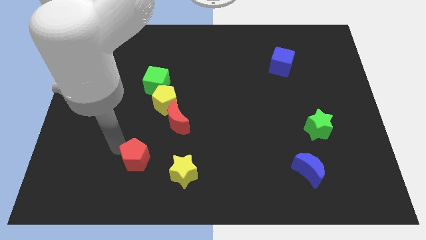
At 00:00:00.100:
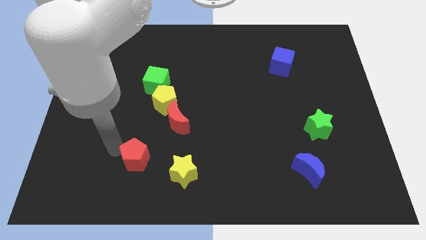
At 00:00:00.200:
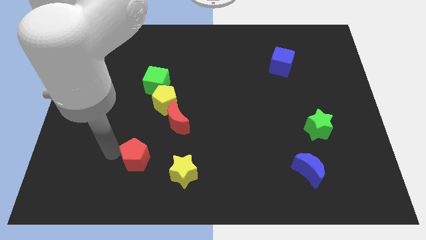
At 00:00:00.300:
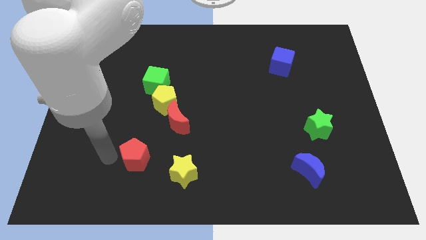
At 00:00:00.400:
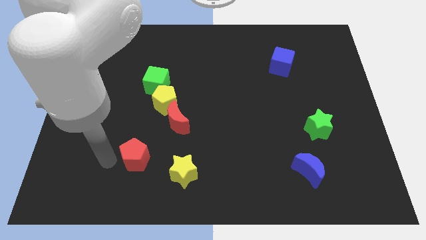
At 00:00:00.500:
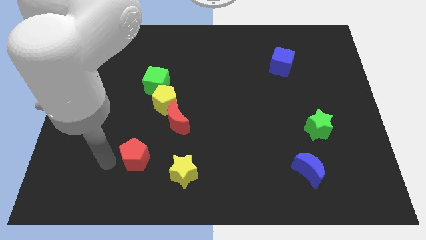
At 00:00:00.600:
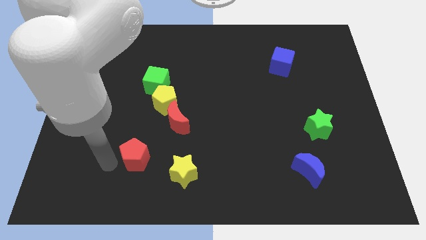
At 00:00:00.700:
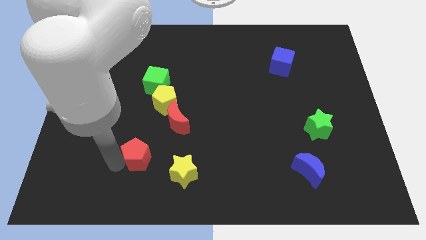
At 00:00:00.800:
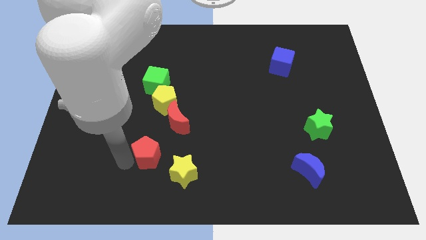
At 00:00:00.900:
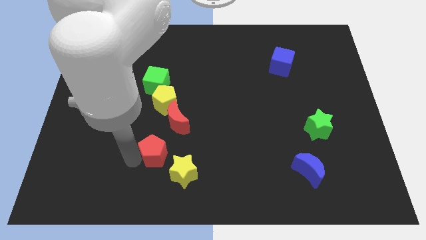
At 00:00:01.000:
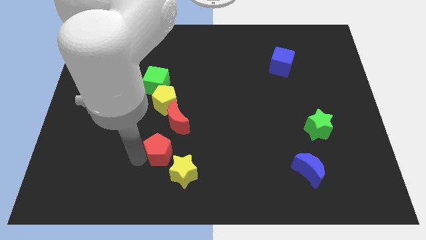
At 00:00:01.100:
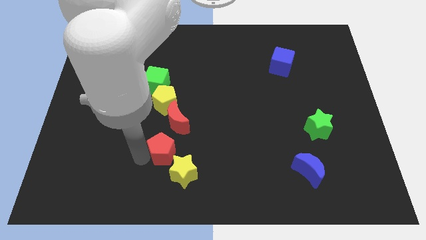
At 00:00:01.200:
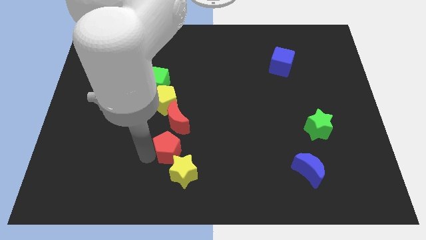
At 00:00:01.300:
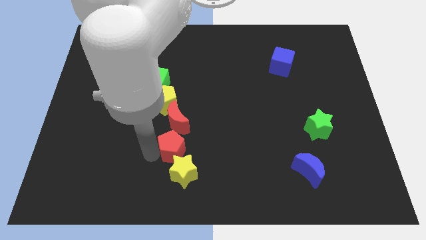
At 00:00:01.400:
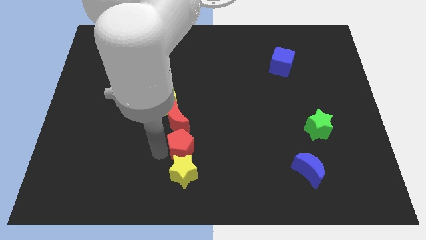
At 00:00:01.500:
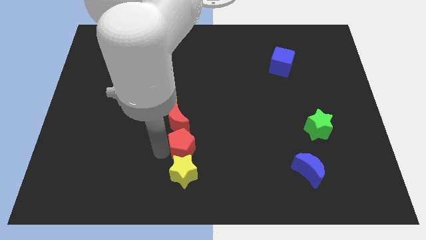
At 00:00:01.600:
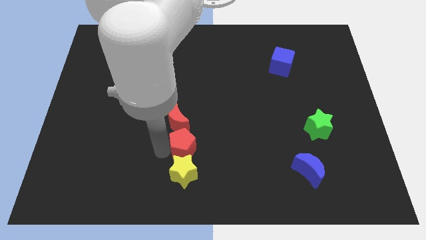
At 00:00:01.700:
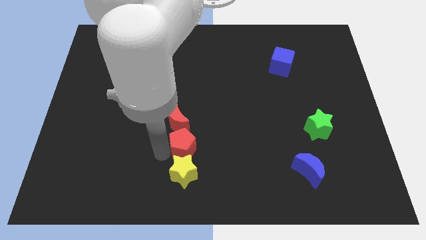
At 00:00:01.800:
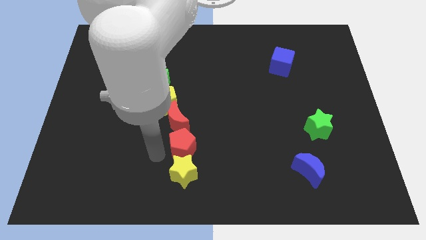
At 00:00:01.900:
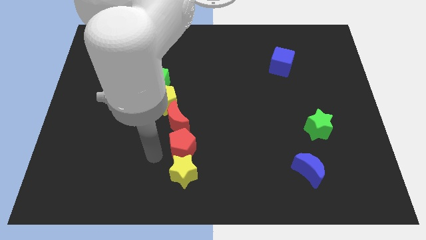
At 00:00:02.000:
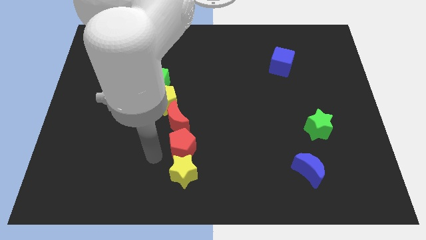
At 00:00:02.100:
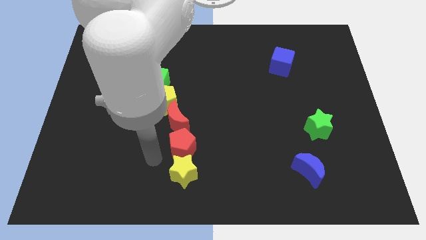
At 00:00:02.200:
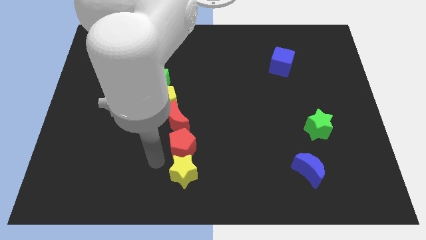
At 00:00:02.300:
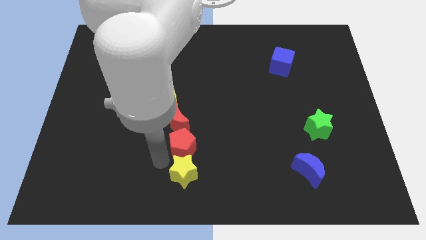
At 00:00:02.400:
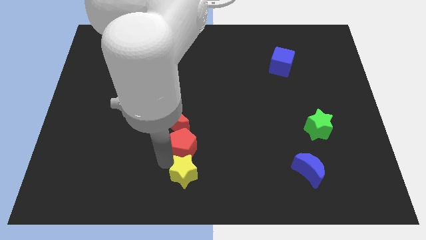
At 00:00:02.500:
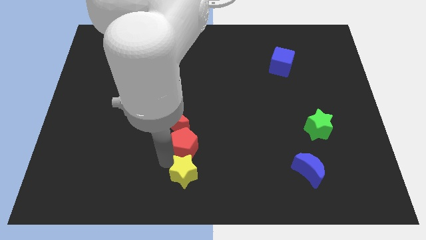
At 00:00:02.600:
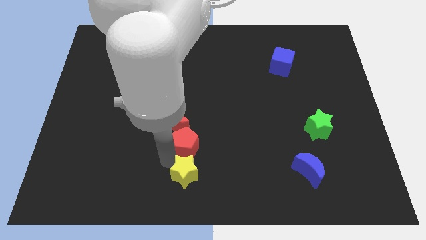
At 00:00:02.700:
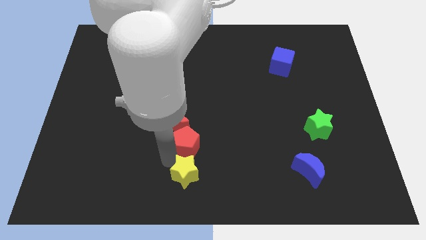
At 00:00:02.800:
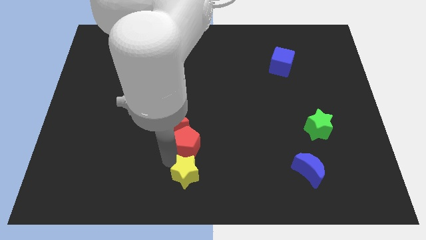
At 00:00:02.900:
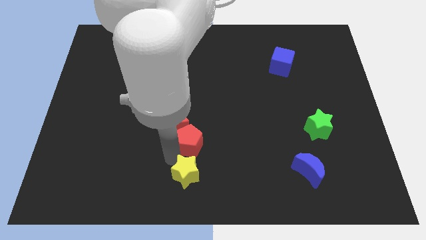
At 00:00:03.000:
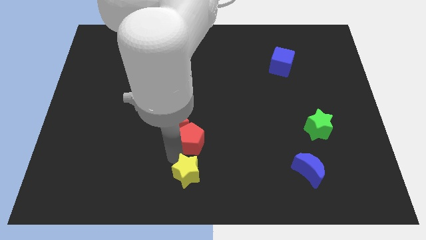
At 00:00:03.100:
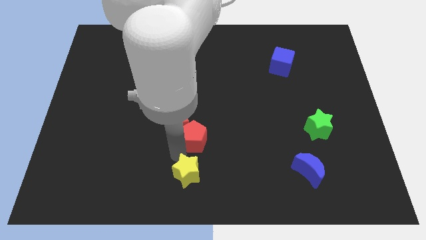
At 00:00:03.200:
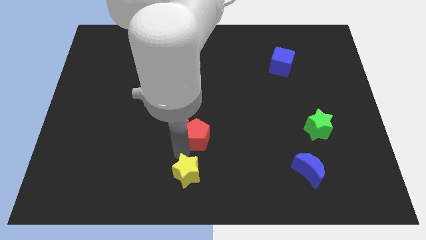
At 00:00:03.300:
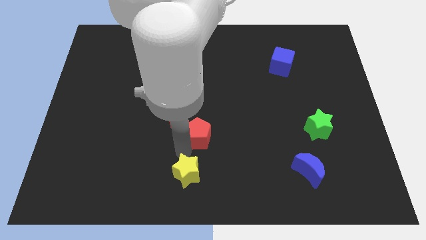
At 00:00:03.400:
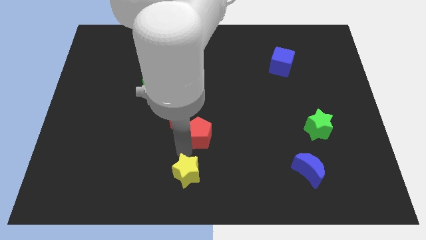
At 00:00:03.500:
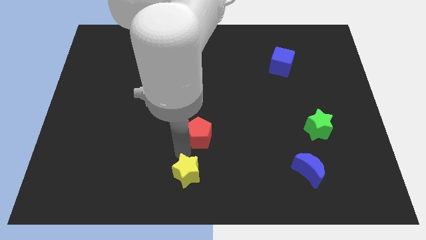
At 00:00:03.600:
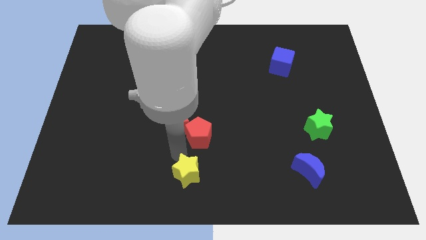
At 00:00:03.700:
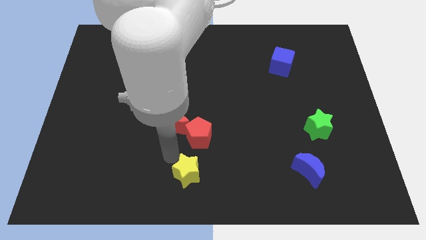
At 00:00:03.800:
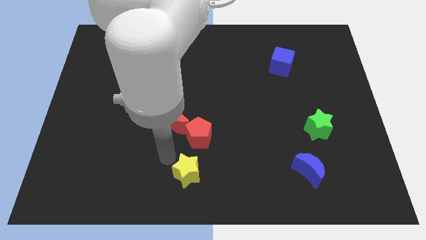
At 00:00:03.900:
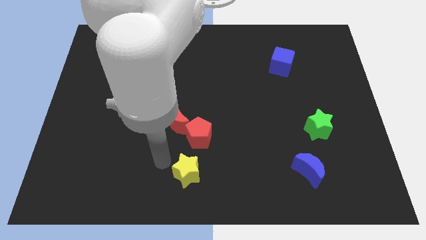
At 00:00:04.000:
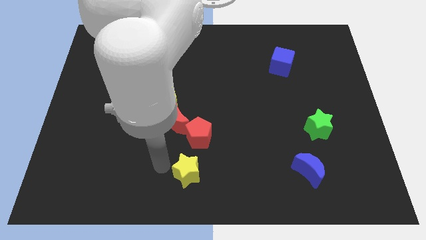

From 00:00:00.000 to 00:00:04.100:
push the red pentagon to the bottom of the red crescent

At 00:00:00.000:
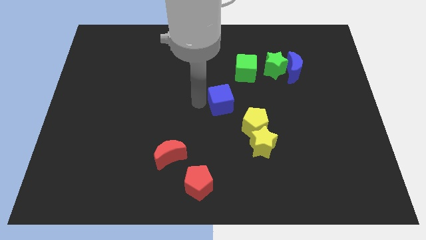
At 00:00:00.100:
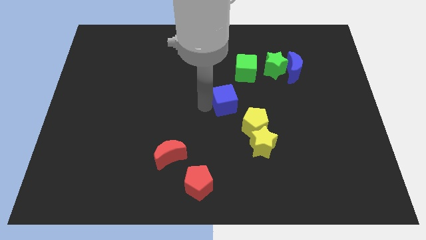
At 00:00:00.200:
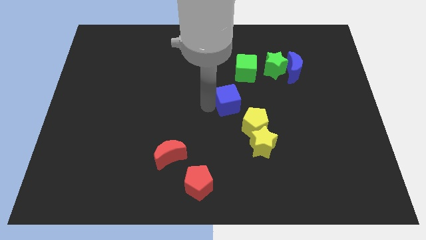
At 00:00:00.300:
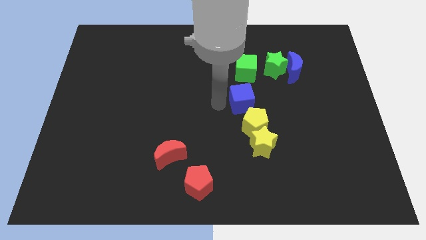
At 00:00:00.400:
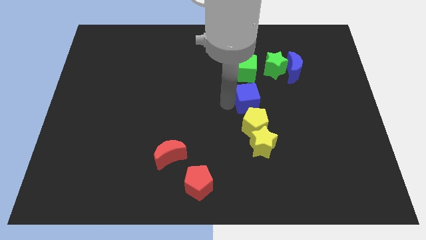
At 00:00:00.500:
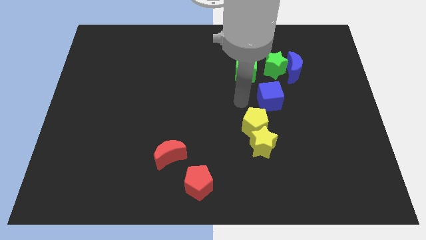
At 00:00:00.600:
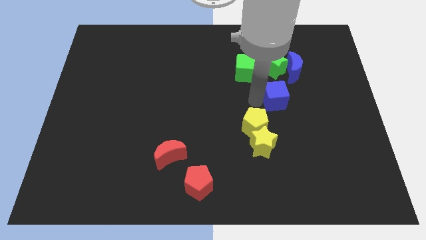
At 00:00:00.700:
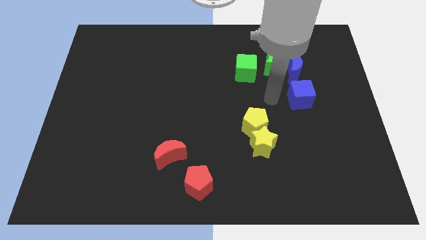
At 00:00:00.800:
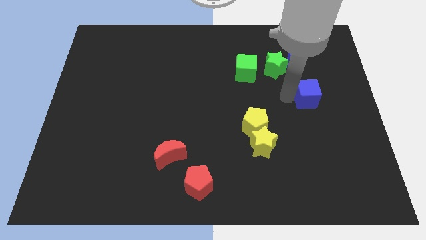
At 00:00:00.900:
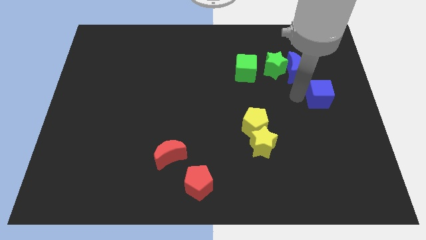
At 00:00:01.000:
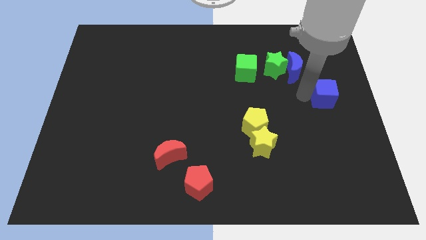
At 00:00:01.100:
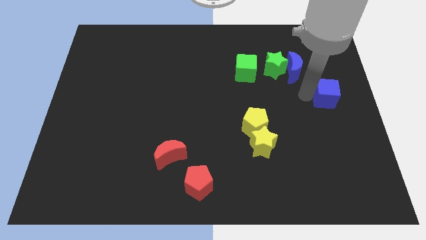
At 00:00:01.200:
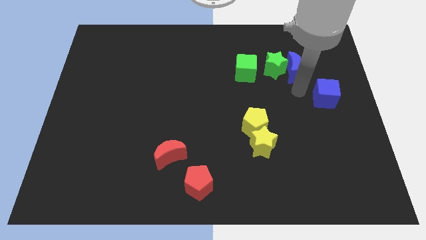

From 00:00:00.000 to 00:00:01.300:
slide blue cube towards center right

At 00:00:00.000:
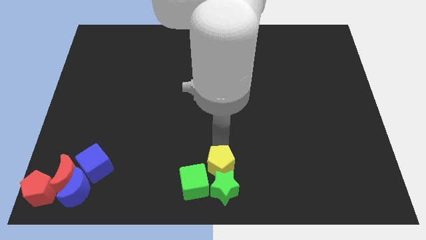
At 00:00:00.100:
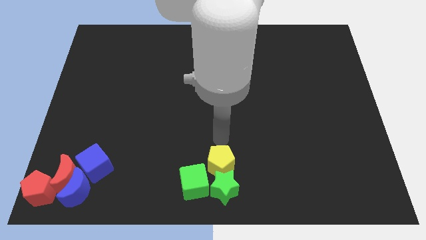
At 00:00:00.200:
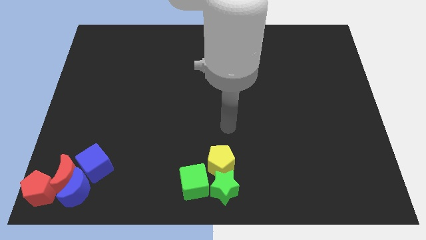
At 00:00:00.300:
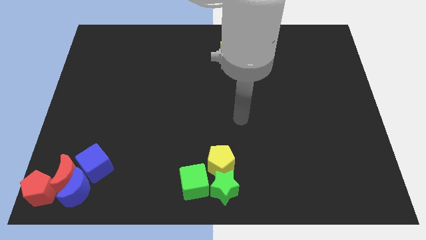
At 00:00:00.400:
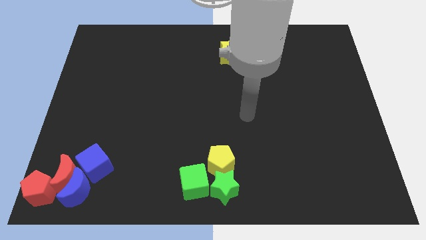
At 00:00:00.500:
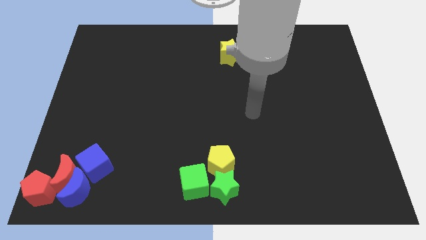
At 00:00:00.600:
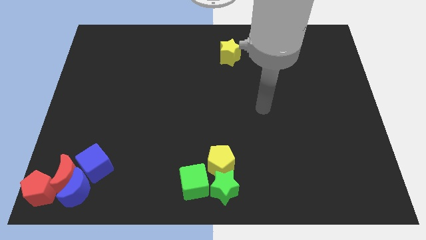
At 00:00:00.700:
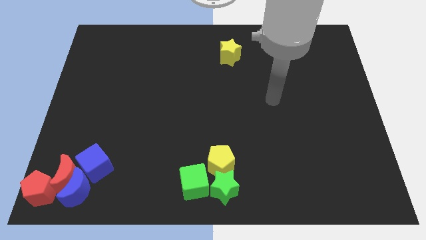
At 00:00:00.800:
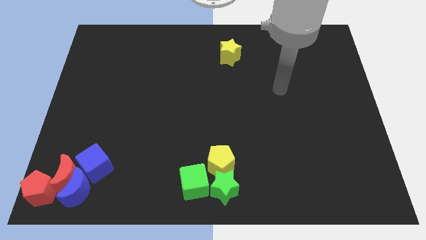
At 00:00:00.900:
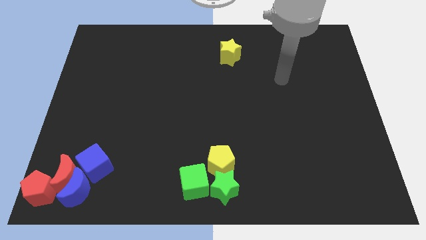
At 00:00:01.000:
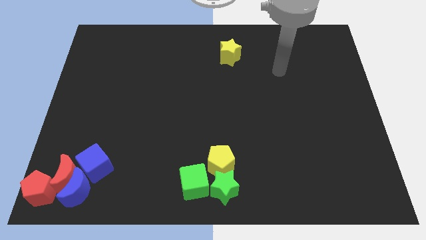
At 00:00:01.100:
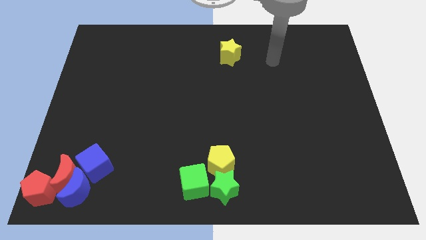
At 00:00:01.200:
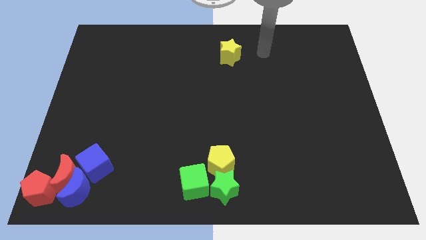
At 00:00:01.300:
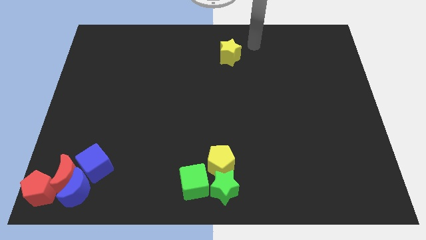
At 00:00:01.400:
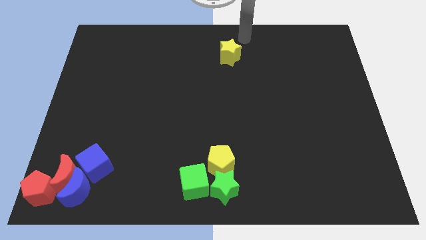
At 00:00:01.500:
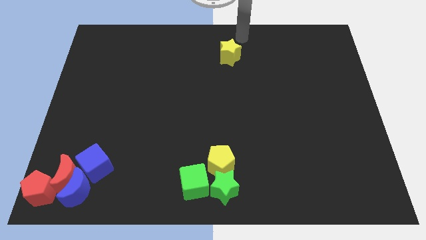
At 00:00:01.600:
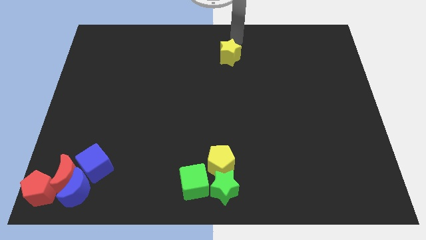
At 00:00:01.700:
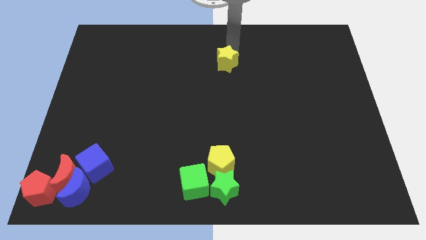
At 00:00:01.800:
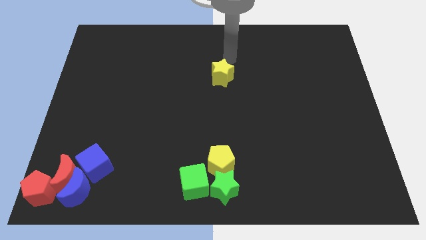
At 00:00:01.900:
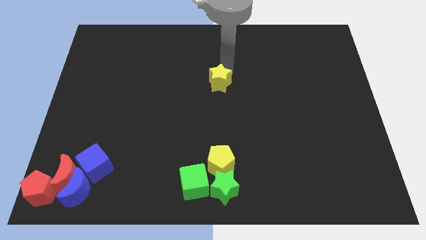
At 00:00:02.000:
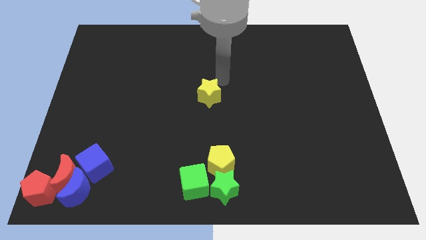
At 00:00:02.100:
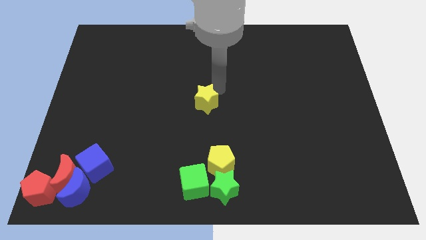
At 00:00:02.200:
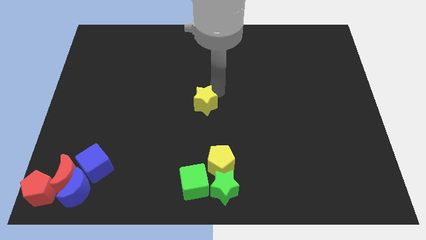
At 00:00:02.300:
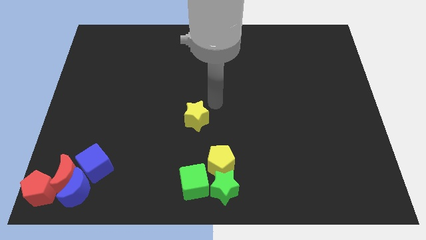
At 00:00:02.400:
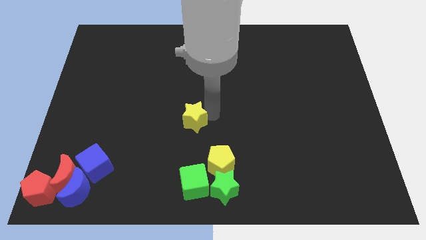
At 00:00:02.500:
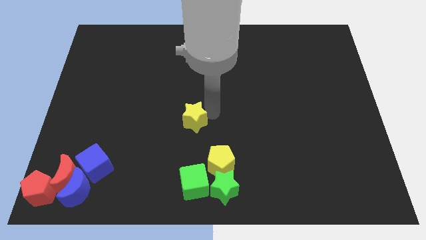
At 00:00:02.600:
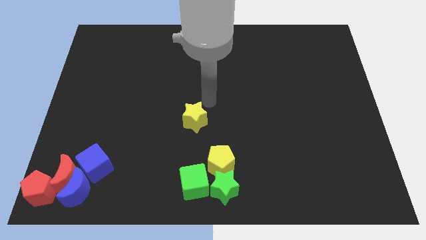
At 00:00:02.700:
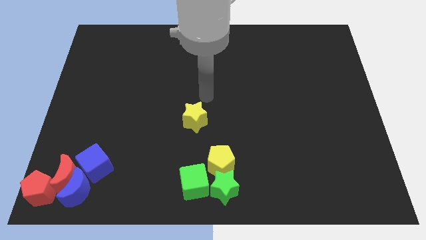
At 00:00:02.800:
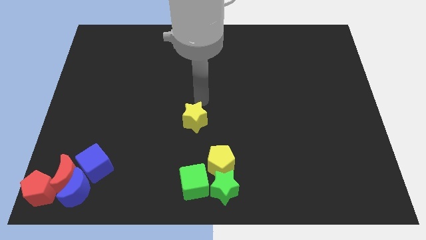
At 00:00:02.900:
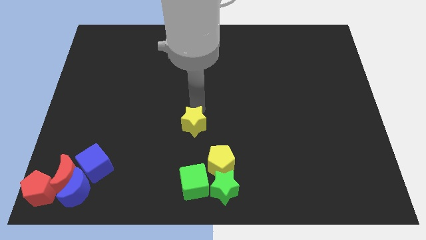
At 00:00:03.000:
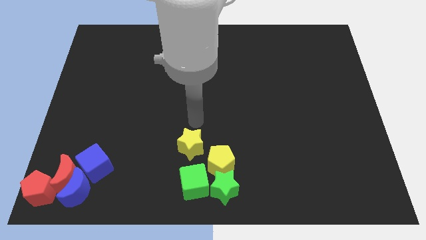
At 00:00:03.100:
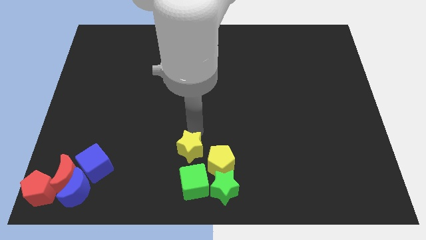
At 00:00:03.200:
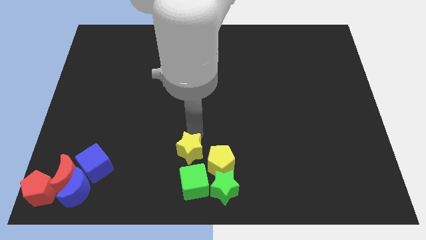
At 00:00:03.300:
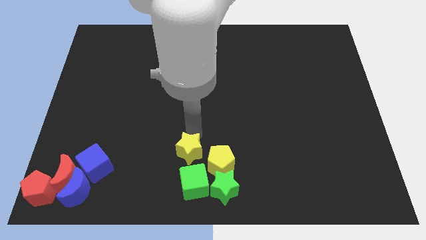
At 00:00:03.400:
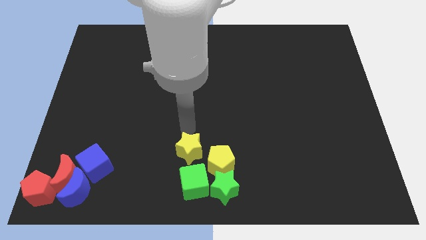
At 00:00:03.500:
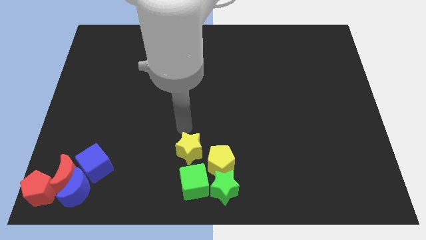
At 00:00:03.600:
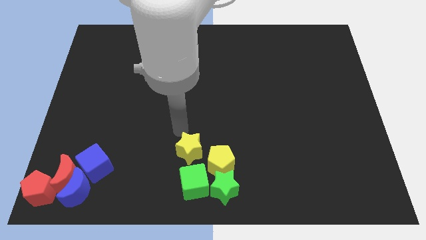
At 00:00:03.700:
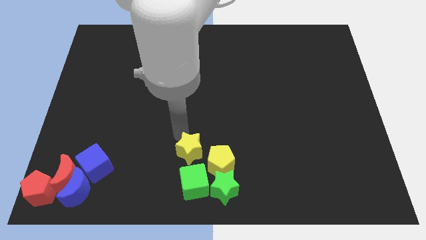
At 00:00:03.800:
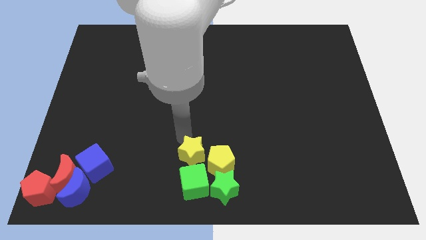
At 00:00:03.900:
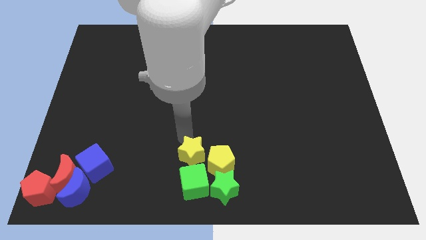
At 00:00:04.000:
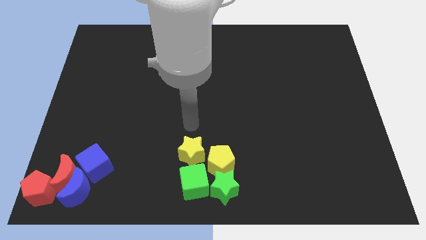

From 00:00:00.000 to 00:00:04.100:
place the yellow star on top of the green cube
